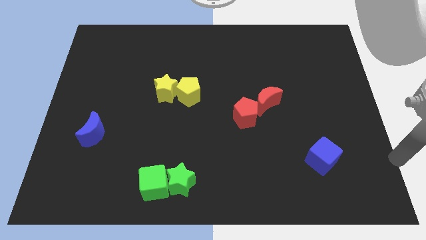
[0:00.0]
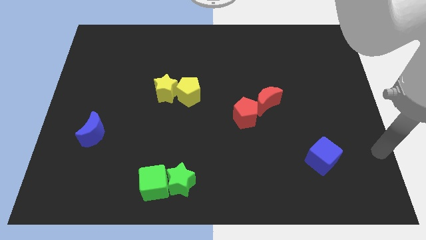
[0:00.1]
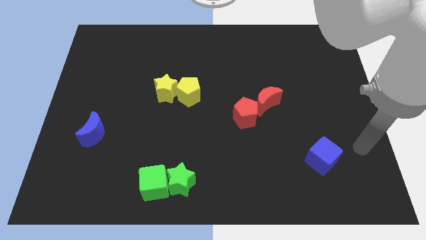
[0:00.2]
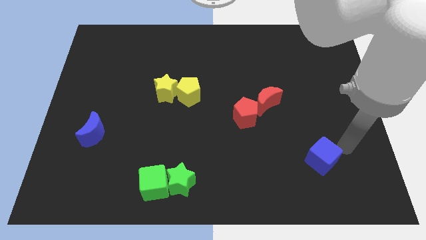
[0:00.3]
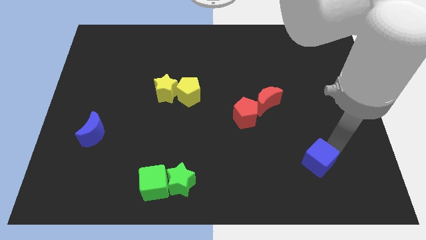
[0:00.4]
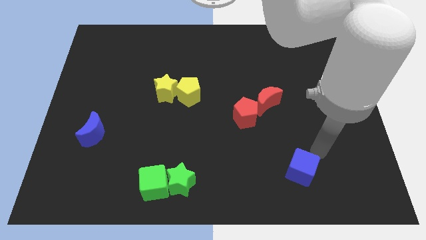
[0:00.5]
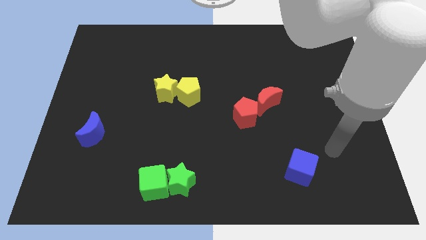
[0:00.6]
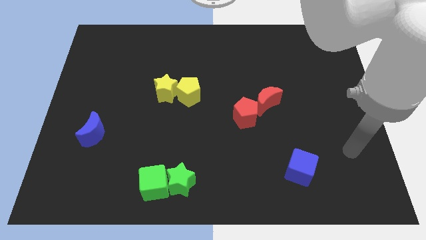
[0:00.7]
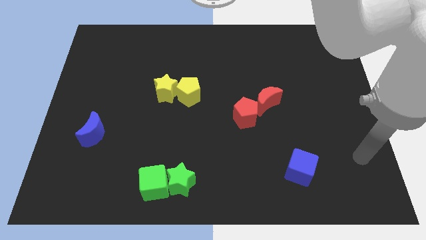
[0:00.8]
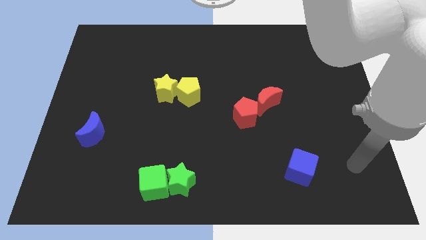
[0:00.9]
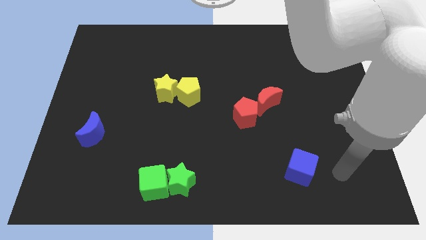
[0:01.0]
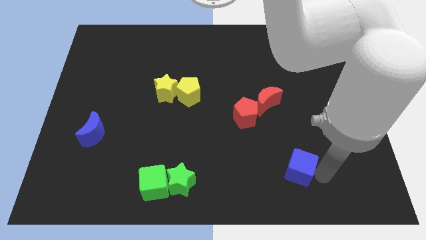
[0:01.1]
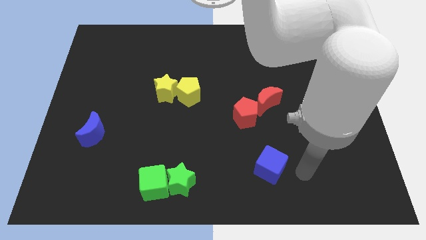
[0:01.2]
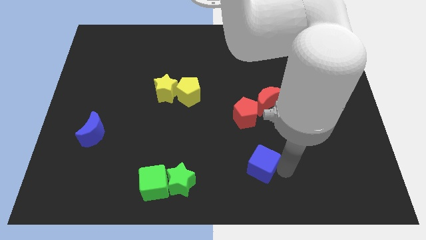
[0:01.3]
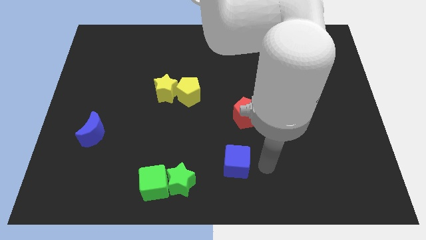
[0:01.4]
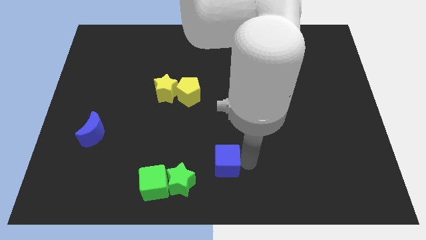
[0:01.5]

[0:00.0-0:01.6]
move thee blue cube slightly to the left of the board

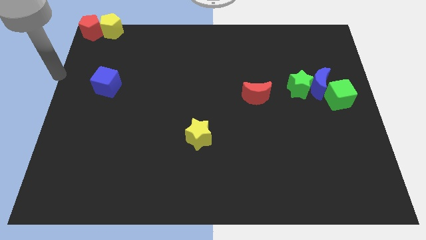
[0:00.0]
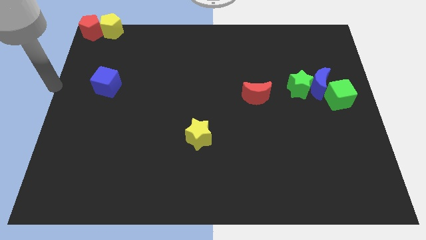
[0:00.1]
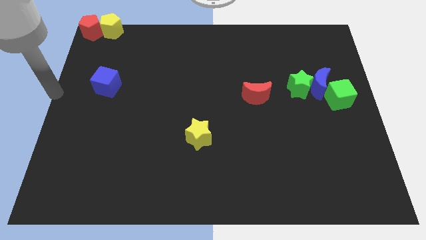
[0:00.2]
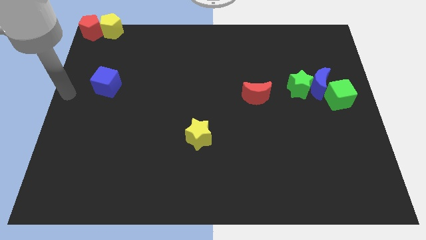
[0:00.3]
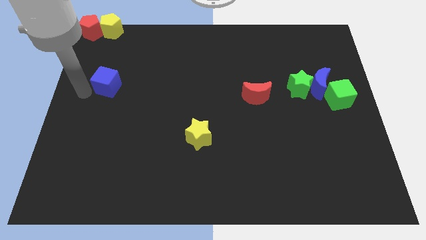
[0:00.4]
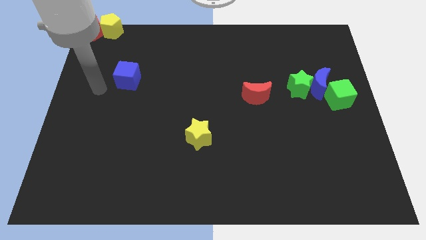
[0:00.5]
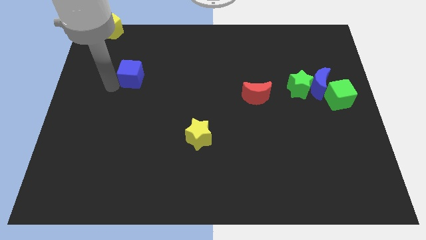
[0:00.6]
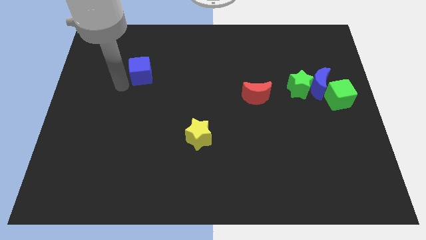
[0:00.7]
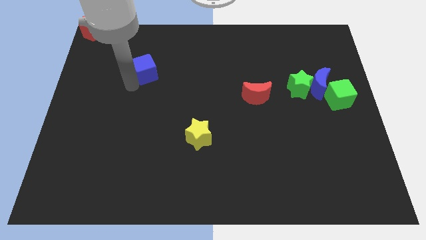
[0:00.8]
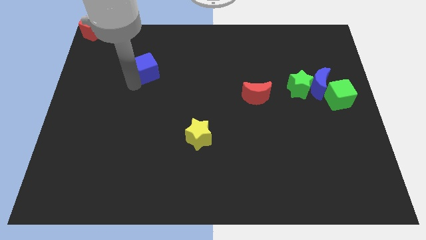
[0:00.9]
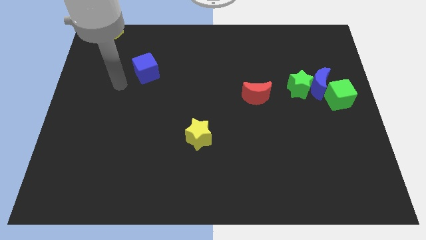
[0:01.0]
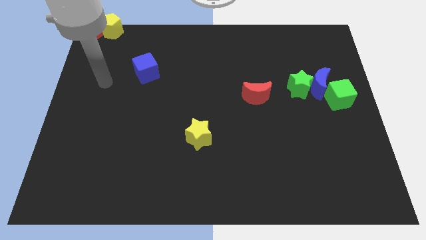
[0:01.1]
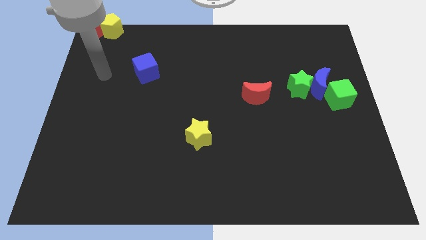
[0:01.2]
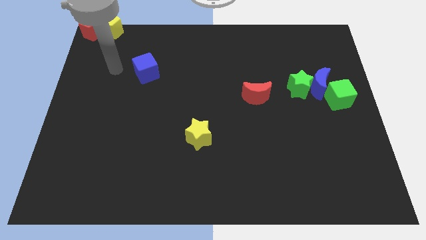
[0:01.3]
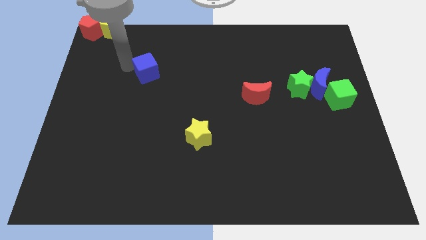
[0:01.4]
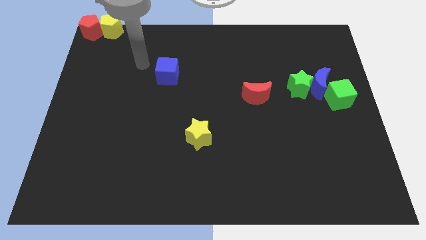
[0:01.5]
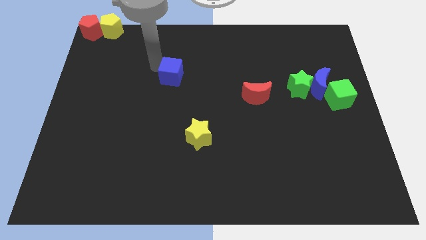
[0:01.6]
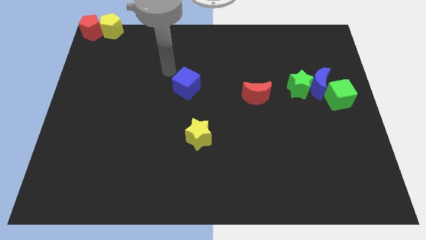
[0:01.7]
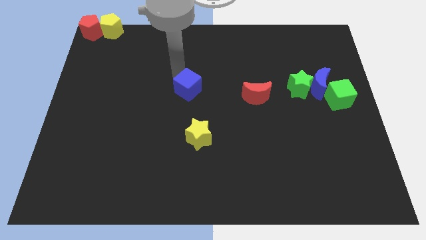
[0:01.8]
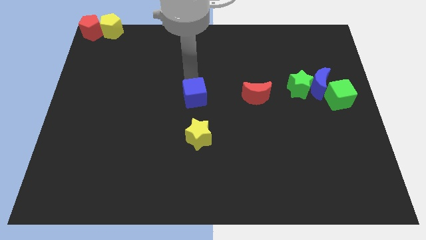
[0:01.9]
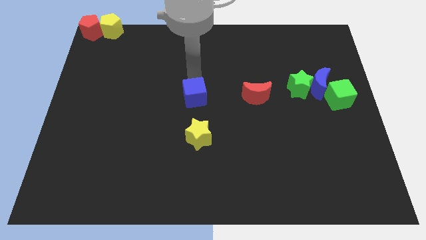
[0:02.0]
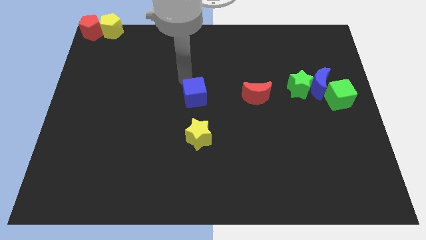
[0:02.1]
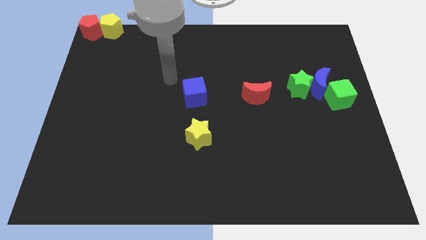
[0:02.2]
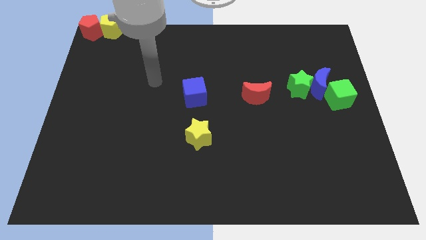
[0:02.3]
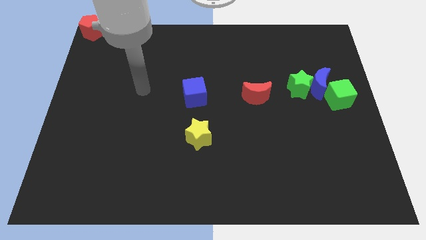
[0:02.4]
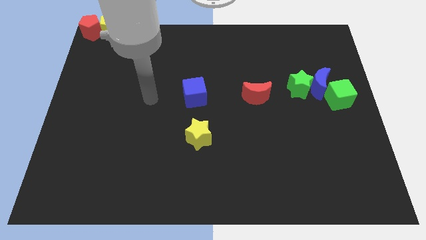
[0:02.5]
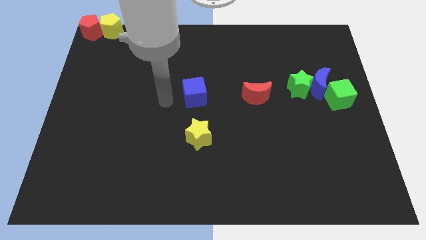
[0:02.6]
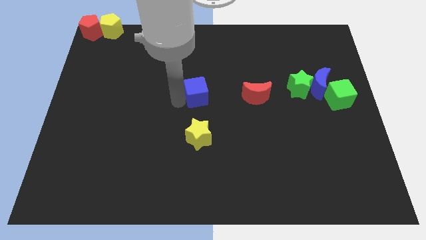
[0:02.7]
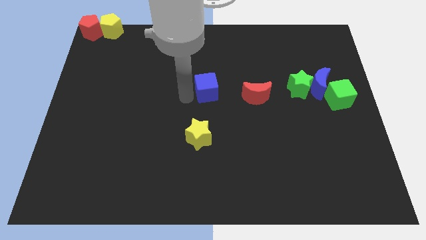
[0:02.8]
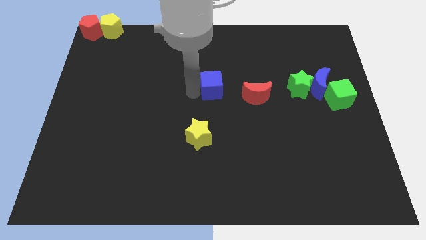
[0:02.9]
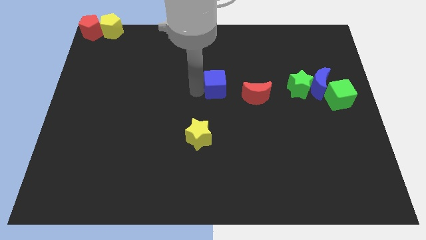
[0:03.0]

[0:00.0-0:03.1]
move the blue cube to the center

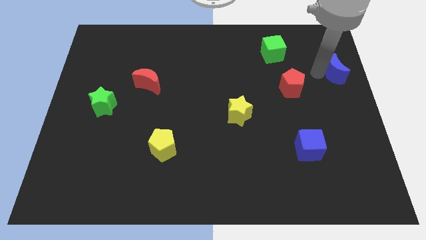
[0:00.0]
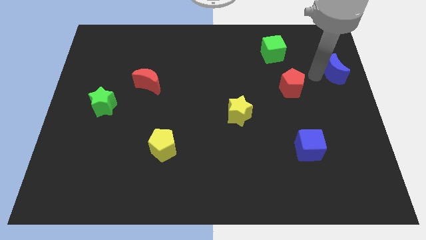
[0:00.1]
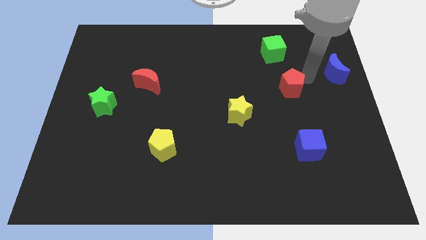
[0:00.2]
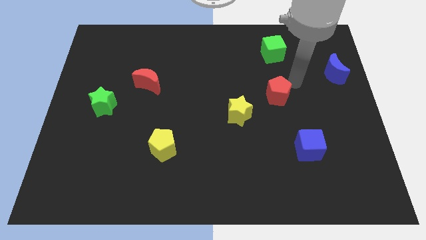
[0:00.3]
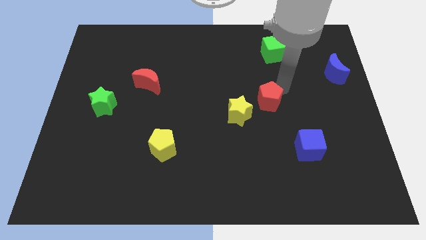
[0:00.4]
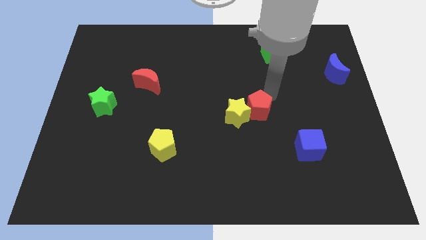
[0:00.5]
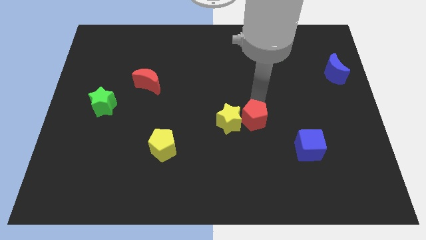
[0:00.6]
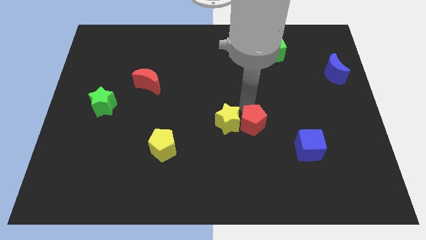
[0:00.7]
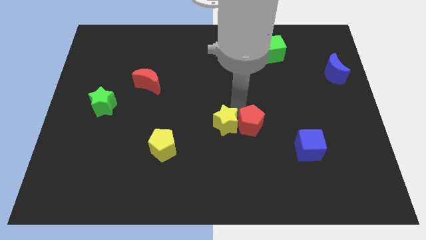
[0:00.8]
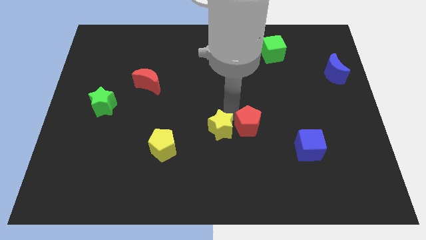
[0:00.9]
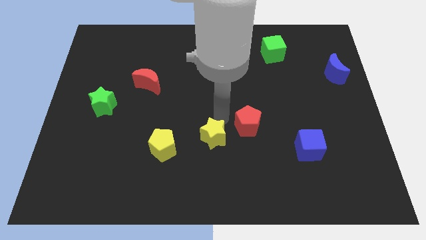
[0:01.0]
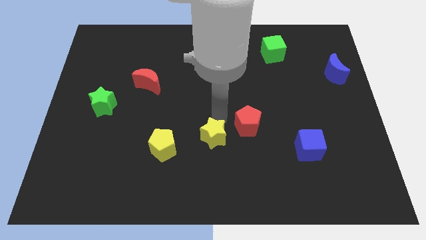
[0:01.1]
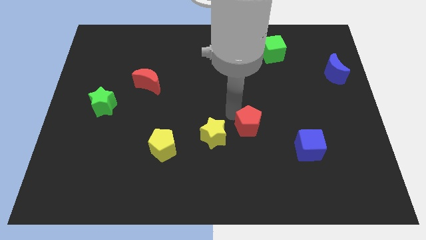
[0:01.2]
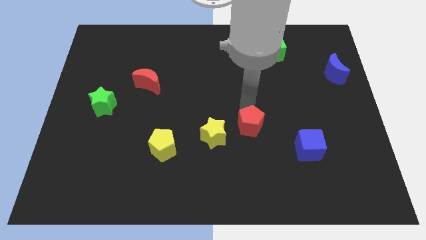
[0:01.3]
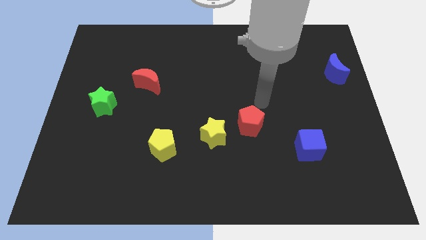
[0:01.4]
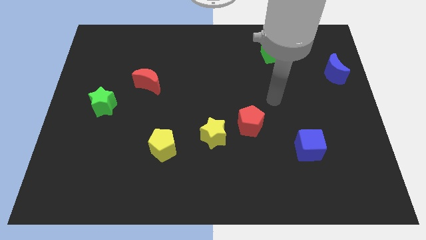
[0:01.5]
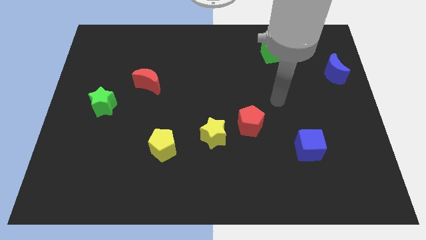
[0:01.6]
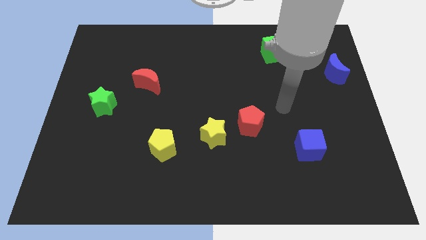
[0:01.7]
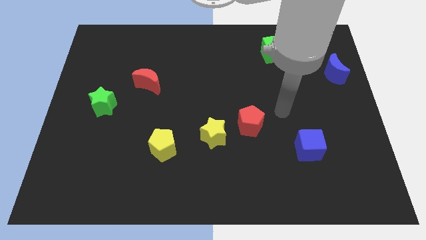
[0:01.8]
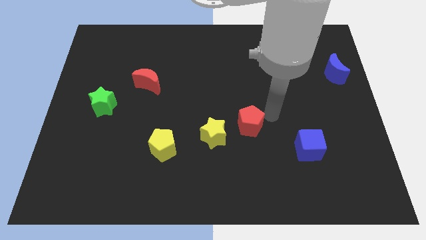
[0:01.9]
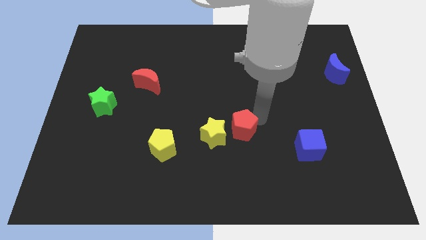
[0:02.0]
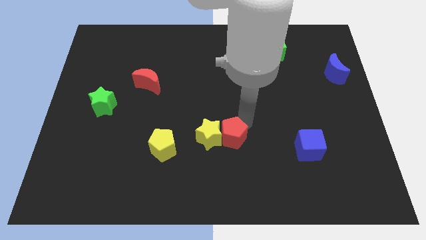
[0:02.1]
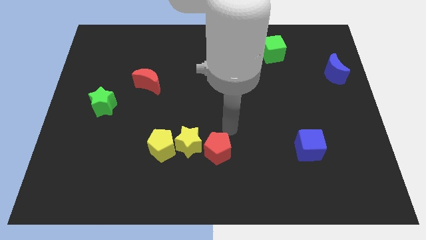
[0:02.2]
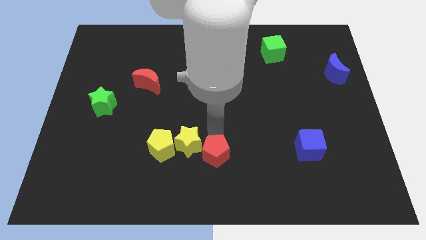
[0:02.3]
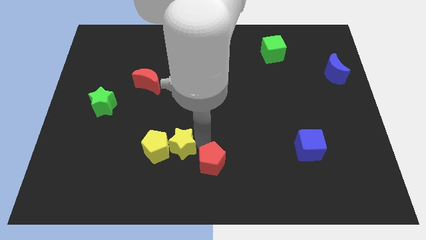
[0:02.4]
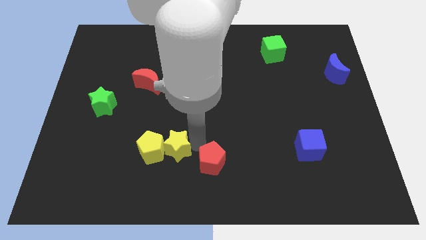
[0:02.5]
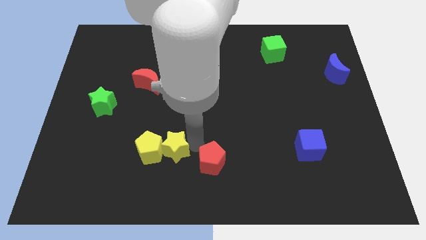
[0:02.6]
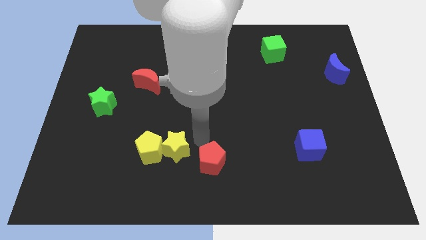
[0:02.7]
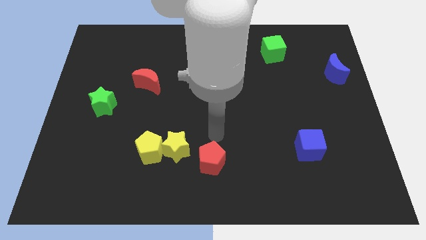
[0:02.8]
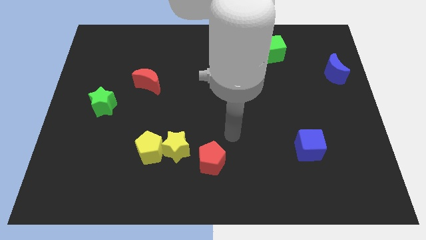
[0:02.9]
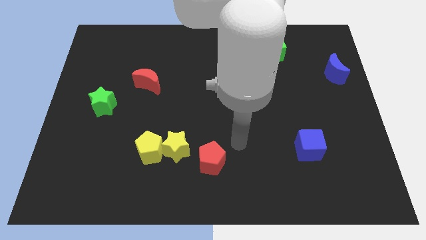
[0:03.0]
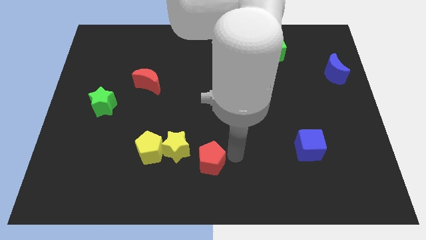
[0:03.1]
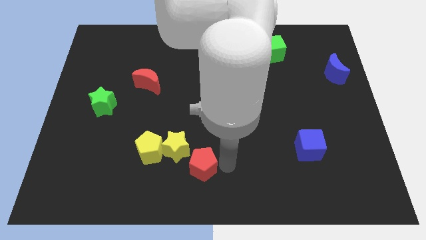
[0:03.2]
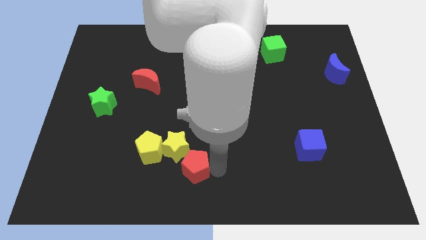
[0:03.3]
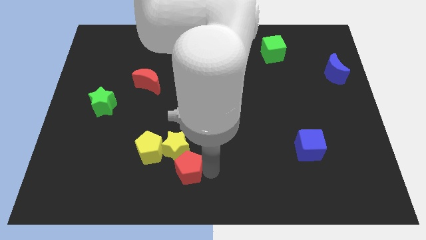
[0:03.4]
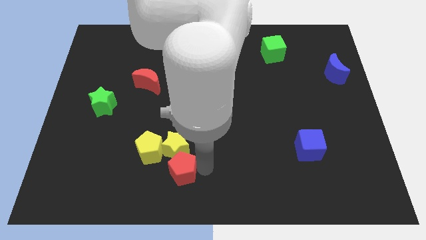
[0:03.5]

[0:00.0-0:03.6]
push the yellow blocks and red pentagon towards the bottom side of the board

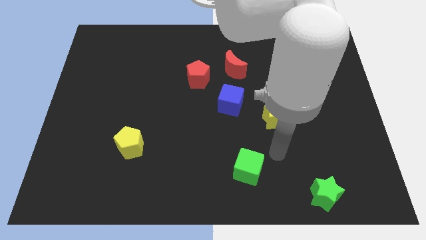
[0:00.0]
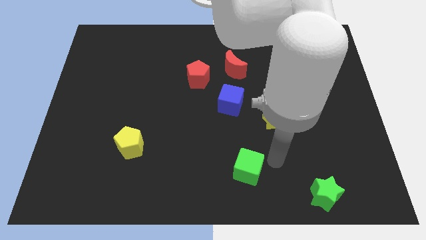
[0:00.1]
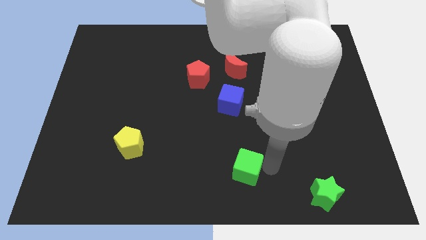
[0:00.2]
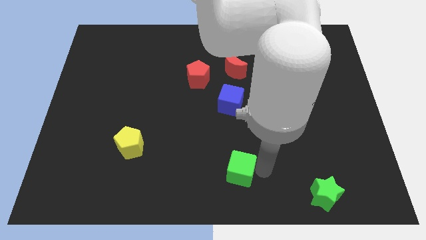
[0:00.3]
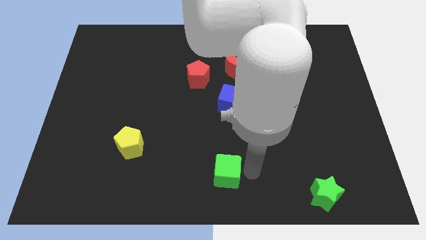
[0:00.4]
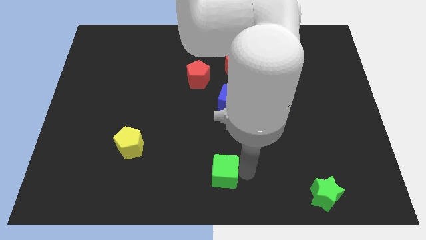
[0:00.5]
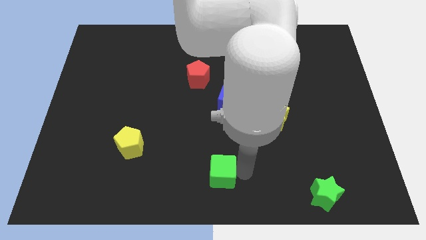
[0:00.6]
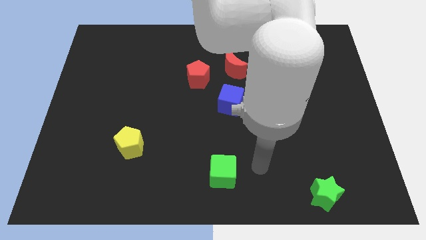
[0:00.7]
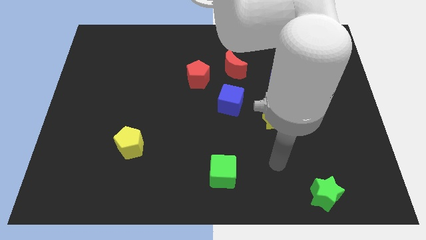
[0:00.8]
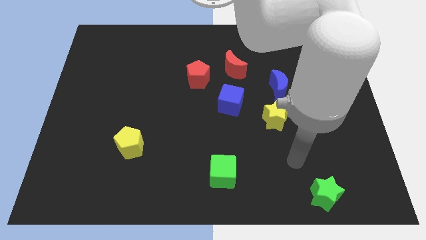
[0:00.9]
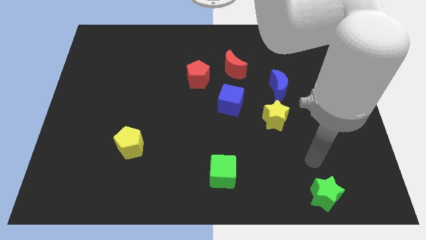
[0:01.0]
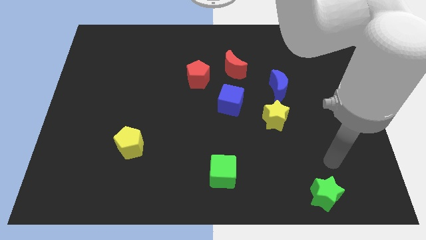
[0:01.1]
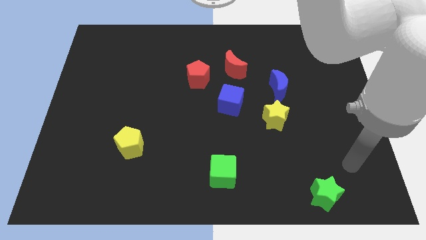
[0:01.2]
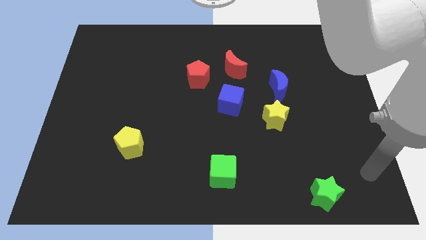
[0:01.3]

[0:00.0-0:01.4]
move the green cube towards the bottom center of the board
